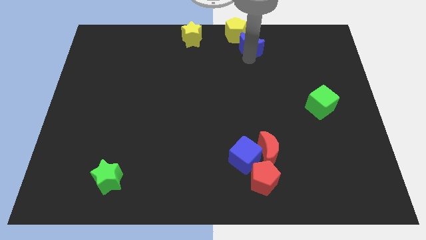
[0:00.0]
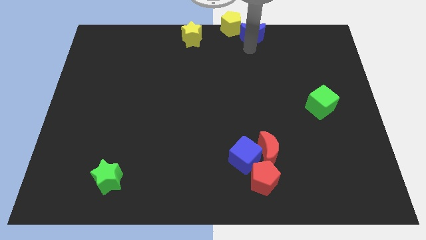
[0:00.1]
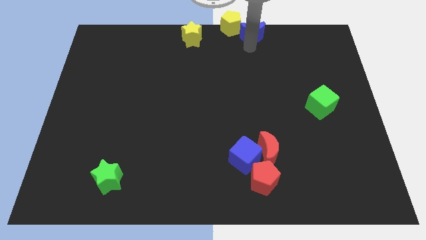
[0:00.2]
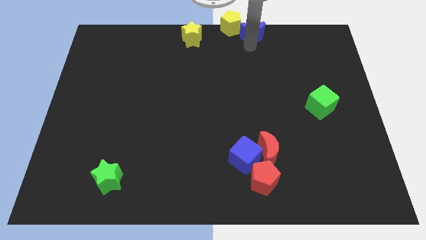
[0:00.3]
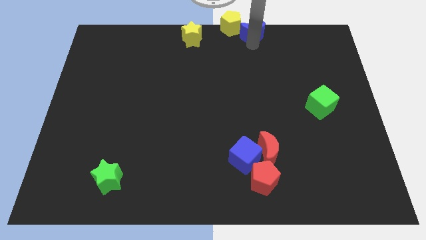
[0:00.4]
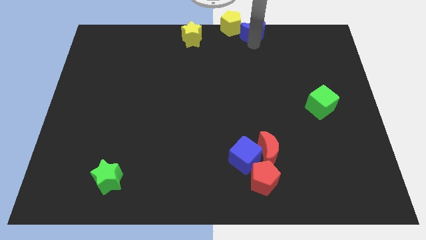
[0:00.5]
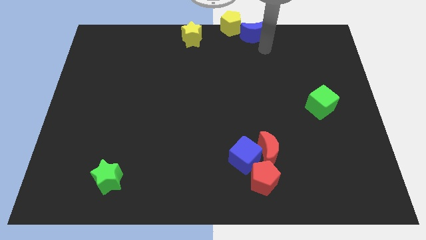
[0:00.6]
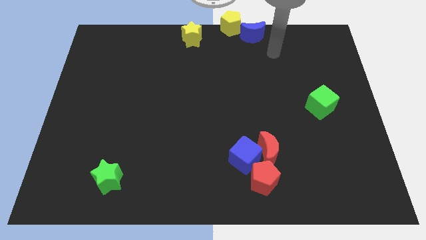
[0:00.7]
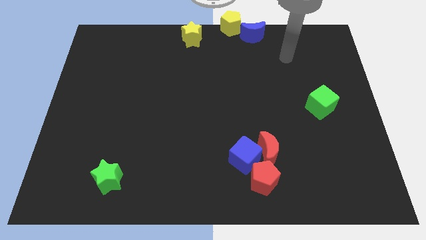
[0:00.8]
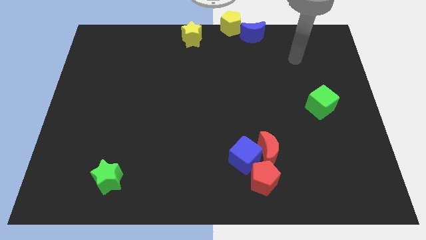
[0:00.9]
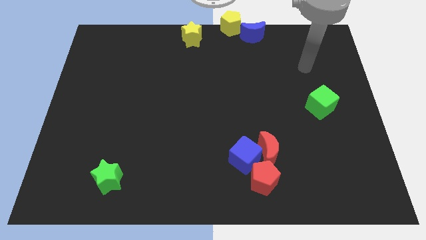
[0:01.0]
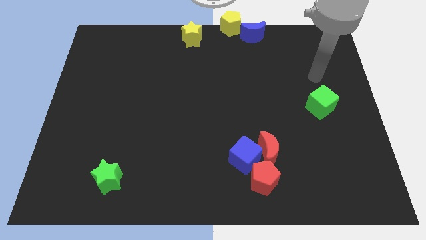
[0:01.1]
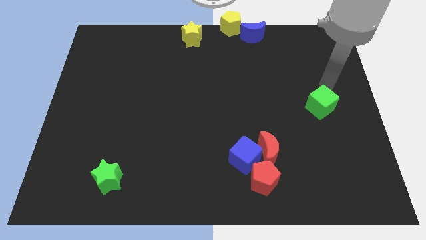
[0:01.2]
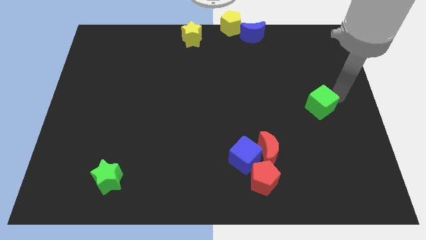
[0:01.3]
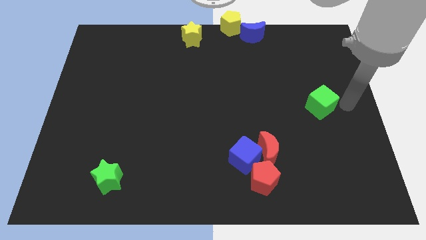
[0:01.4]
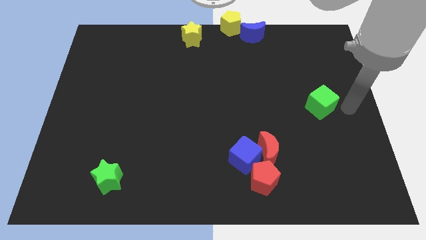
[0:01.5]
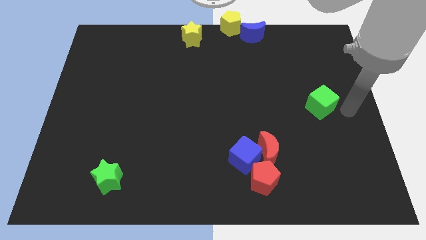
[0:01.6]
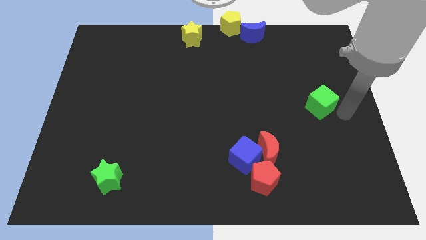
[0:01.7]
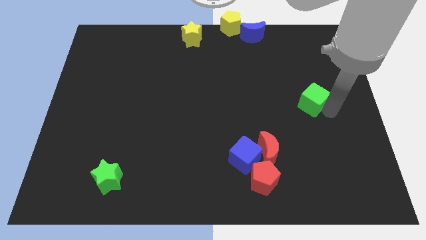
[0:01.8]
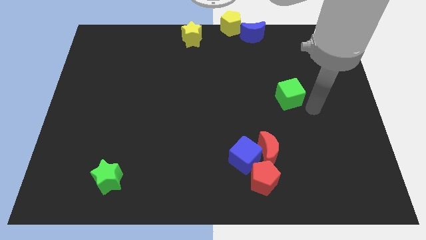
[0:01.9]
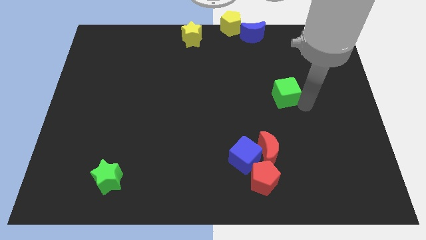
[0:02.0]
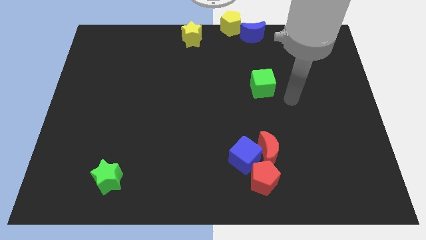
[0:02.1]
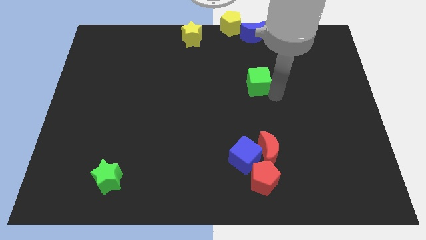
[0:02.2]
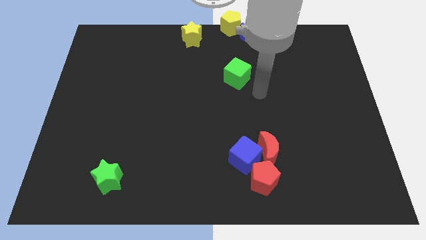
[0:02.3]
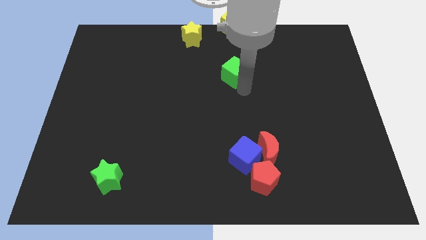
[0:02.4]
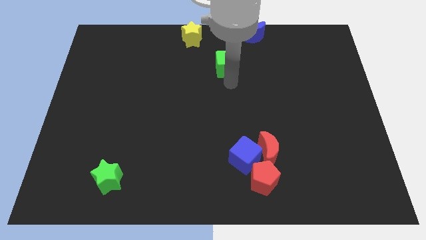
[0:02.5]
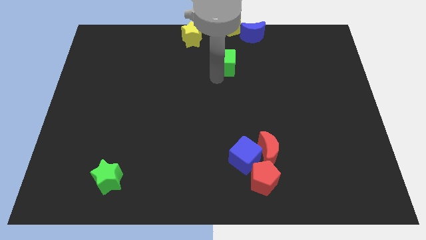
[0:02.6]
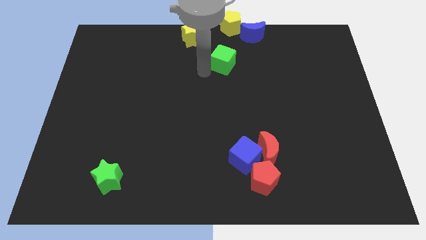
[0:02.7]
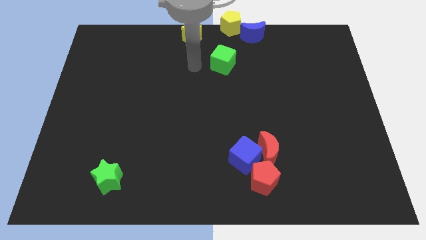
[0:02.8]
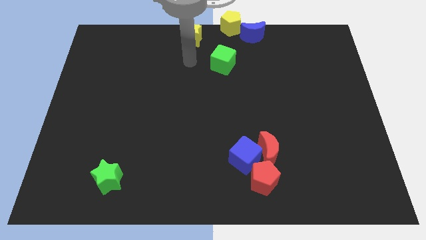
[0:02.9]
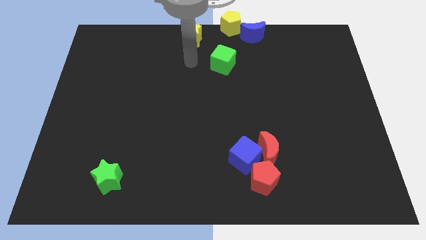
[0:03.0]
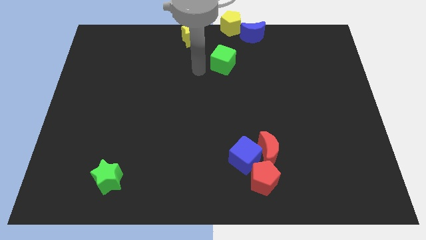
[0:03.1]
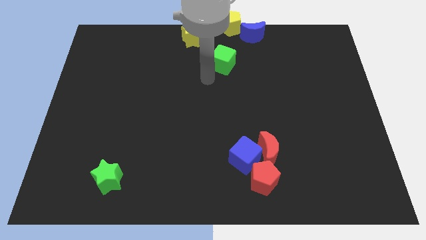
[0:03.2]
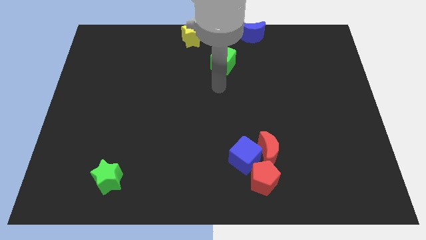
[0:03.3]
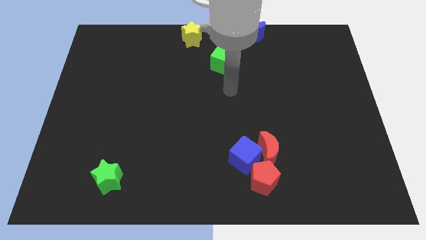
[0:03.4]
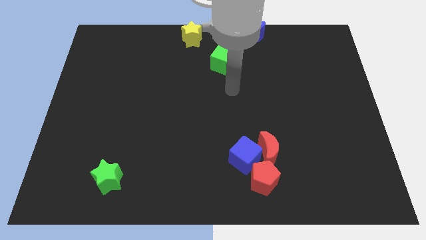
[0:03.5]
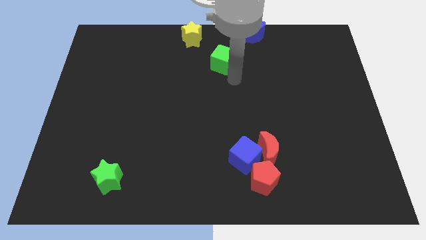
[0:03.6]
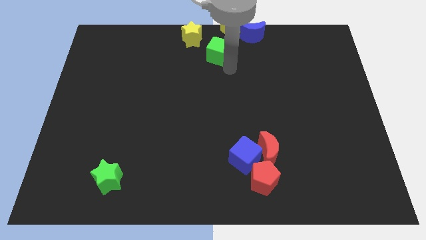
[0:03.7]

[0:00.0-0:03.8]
push the green cube to the bottom side of the yellow pentagon

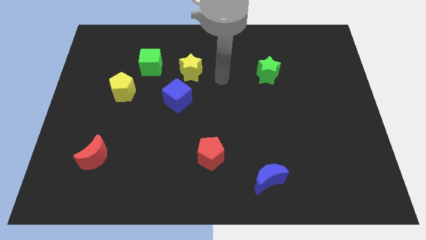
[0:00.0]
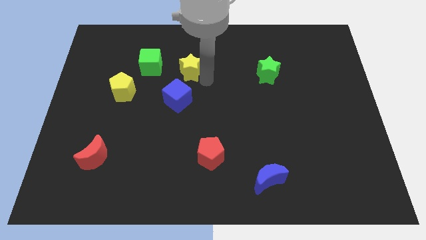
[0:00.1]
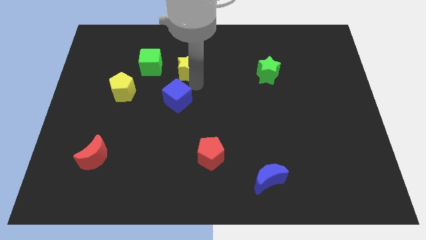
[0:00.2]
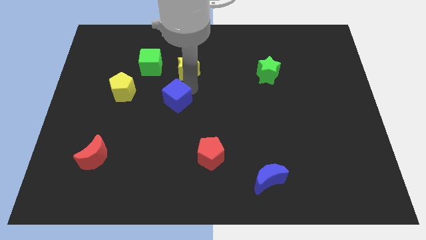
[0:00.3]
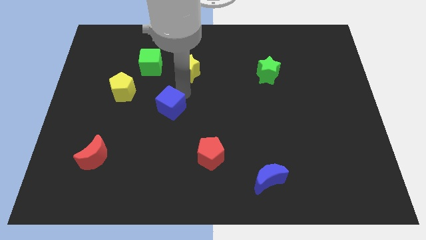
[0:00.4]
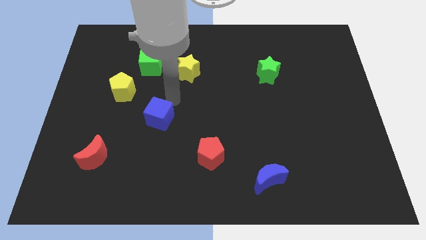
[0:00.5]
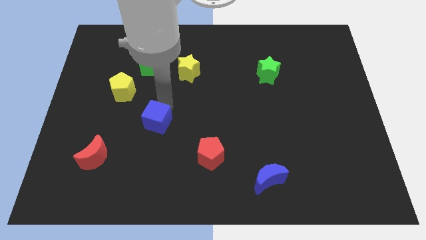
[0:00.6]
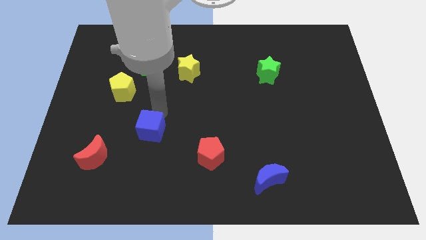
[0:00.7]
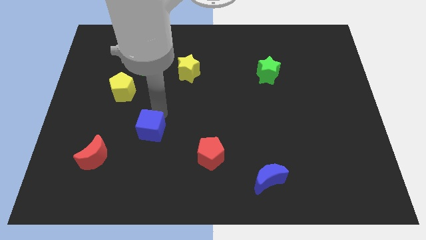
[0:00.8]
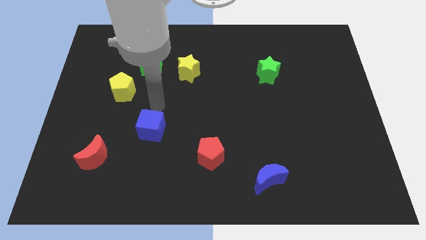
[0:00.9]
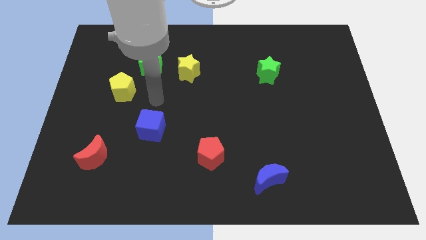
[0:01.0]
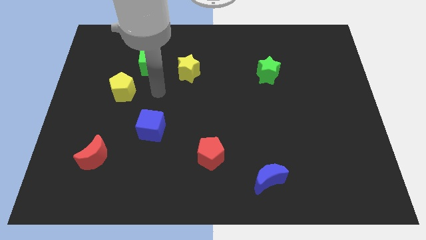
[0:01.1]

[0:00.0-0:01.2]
push the blue cube towards the bottom side of the board

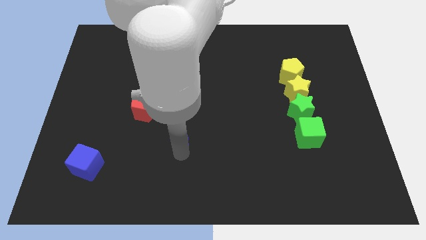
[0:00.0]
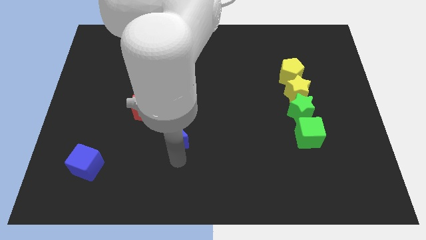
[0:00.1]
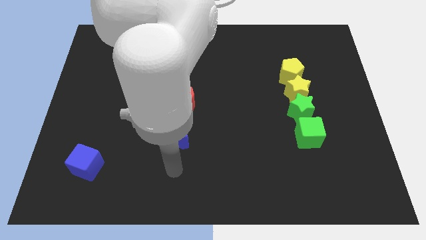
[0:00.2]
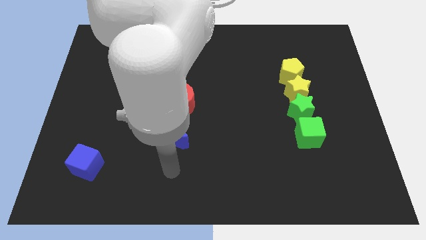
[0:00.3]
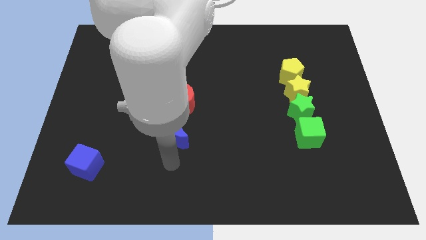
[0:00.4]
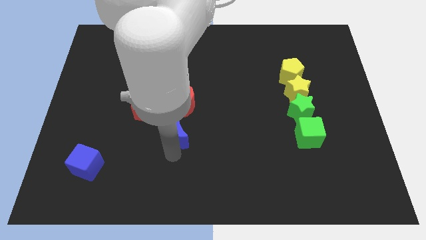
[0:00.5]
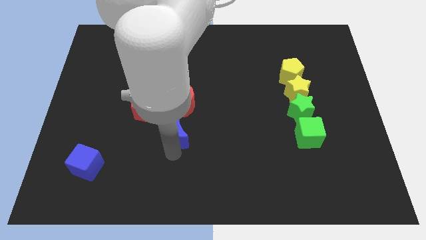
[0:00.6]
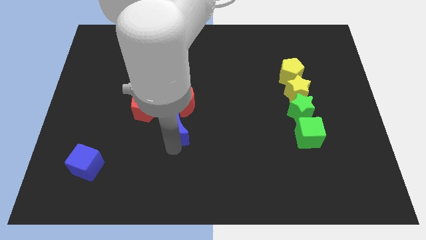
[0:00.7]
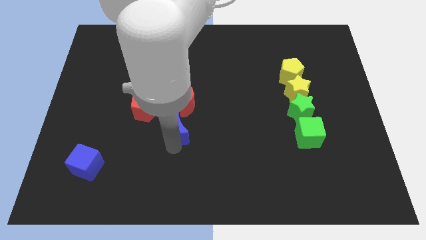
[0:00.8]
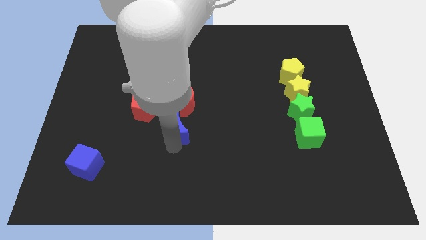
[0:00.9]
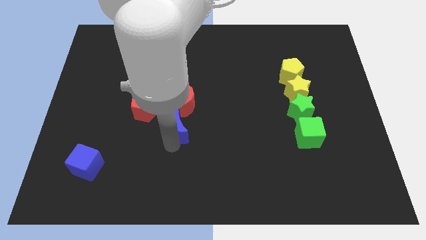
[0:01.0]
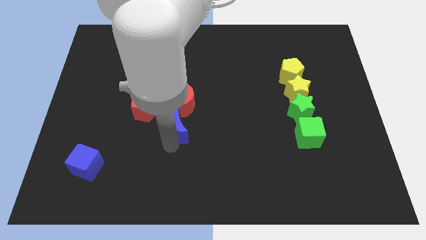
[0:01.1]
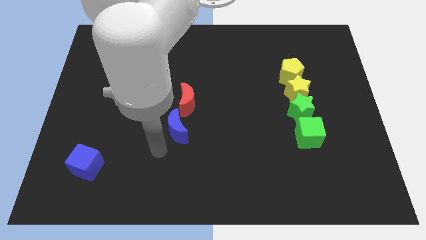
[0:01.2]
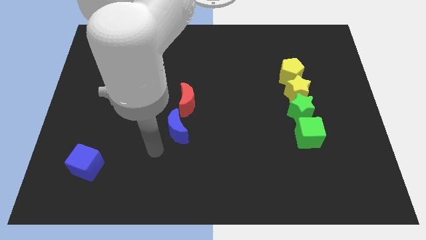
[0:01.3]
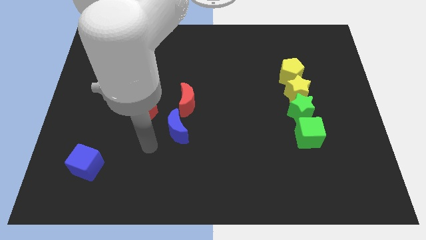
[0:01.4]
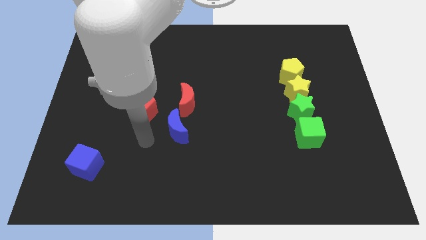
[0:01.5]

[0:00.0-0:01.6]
slightly drag blue crescent towards the right of the red pentagon

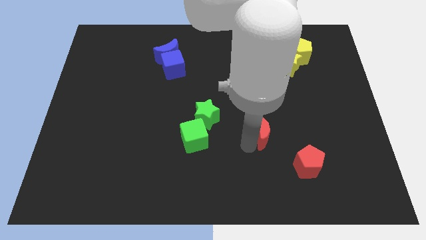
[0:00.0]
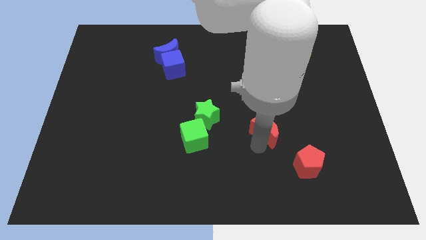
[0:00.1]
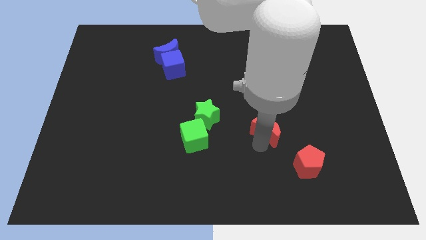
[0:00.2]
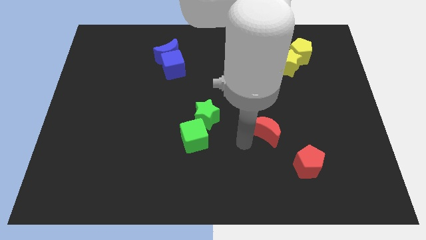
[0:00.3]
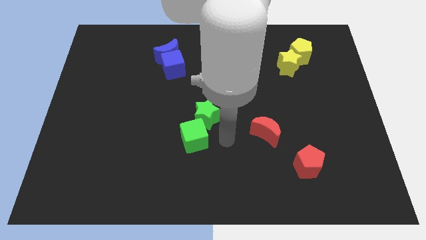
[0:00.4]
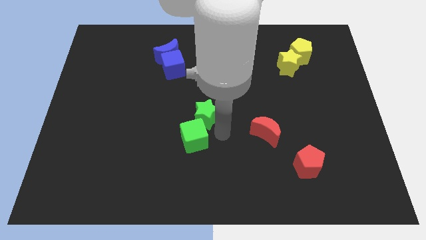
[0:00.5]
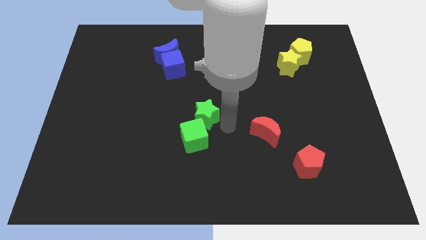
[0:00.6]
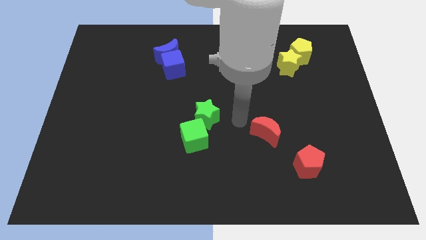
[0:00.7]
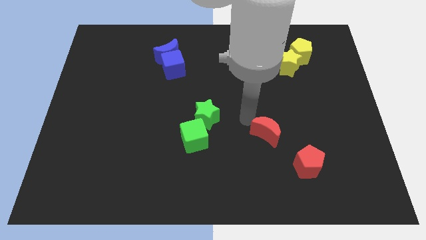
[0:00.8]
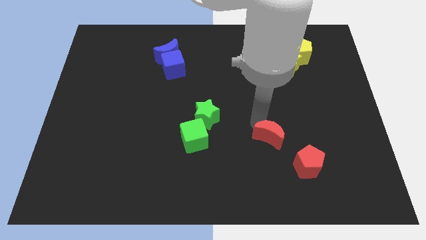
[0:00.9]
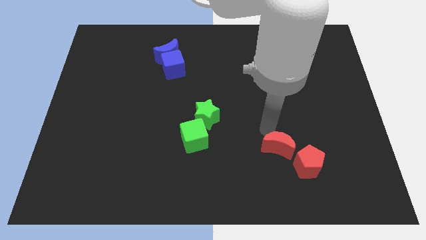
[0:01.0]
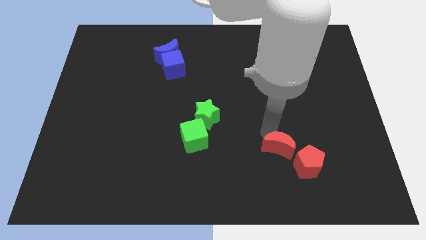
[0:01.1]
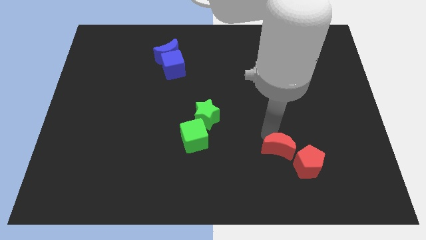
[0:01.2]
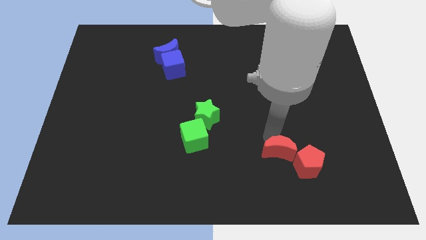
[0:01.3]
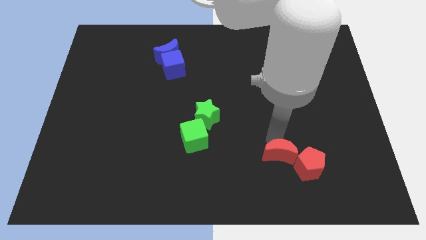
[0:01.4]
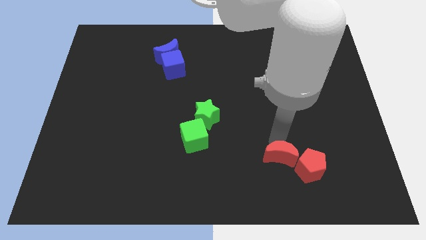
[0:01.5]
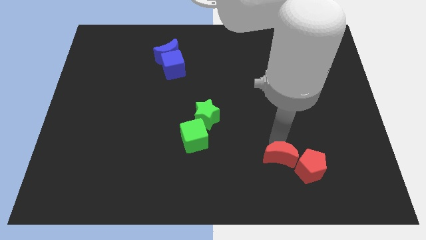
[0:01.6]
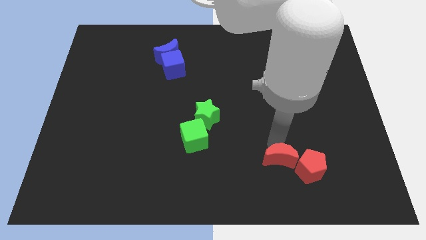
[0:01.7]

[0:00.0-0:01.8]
move the red crescent into the red pentagon

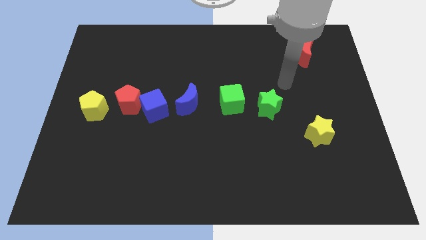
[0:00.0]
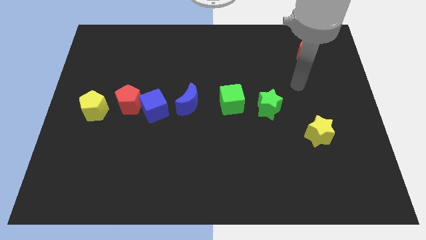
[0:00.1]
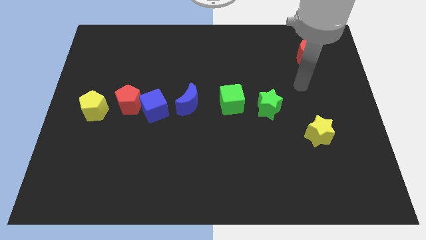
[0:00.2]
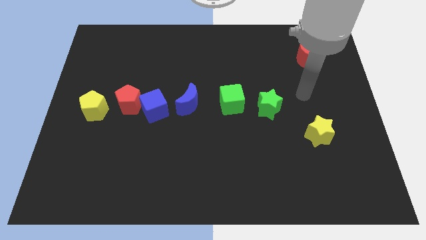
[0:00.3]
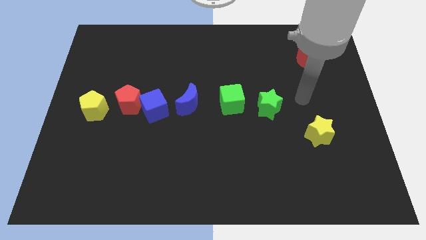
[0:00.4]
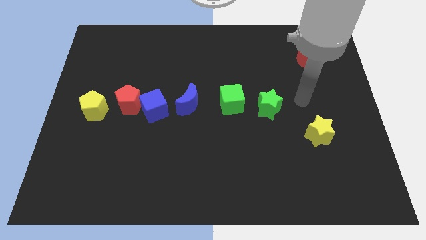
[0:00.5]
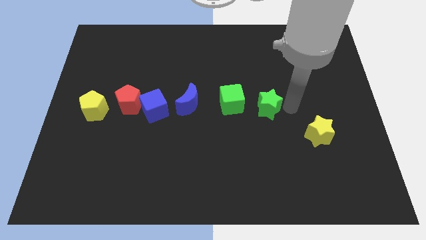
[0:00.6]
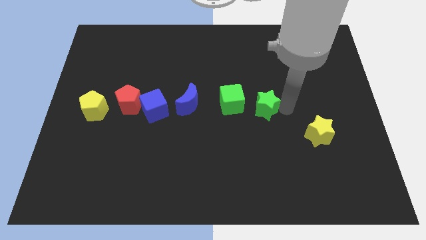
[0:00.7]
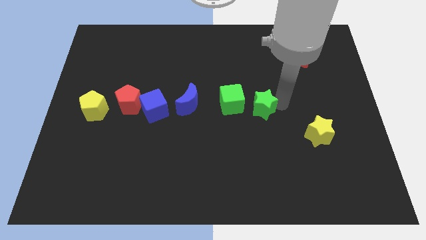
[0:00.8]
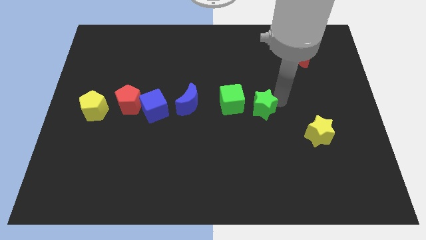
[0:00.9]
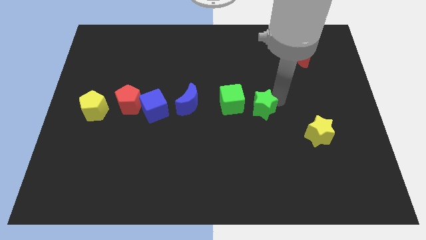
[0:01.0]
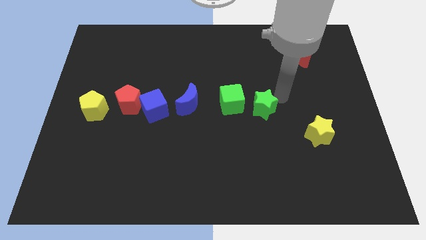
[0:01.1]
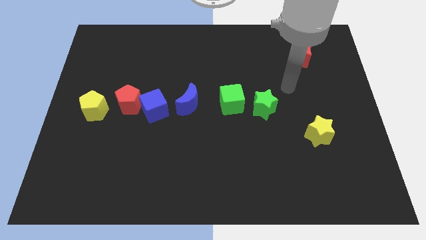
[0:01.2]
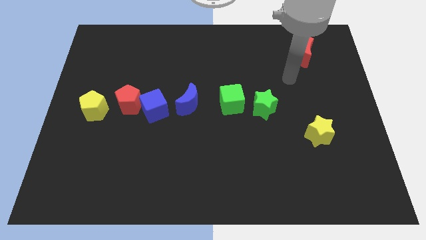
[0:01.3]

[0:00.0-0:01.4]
slightly move the green star towards the left
